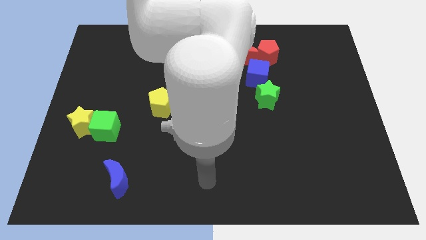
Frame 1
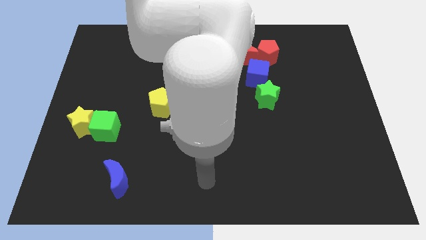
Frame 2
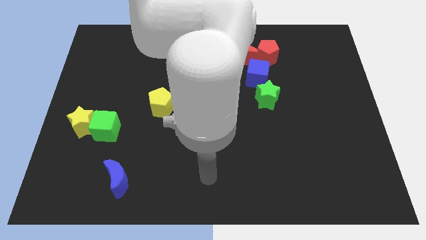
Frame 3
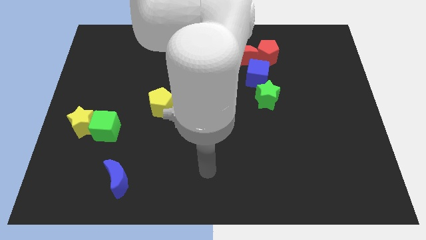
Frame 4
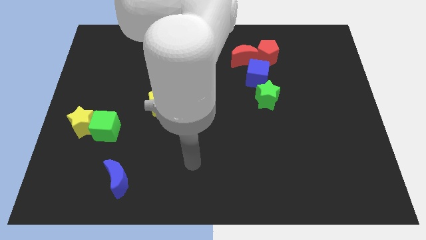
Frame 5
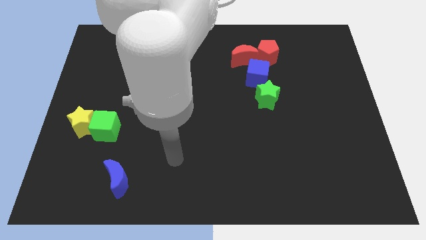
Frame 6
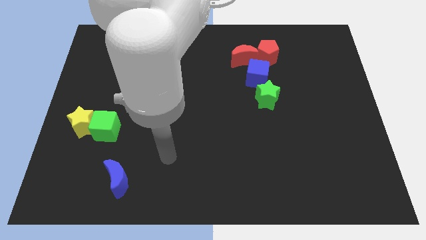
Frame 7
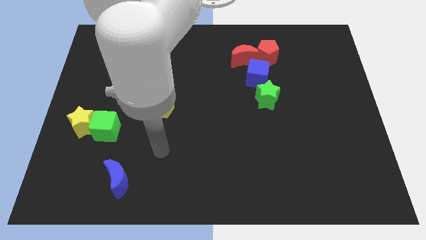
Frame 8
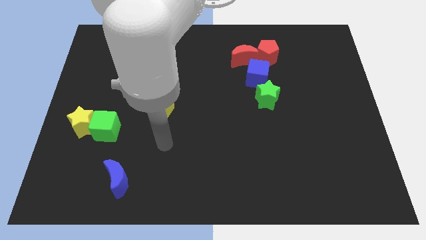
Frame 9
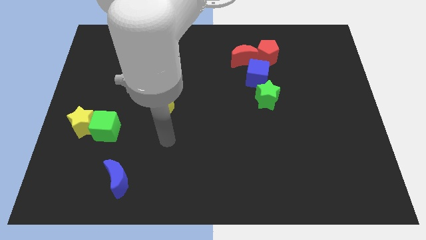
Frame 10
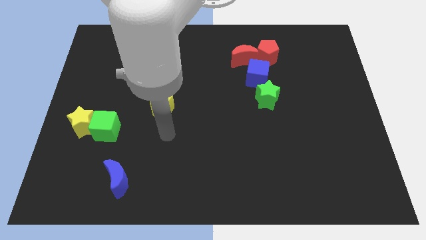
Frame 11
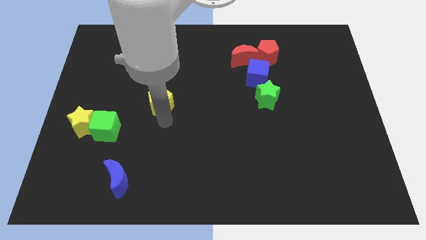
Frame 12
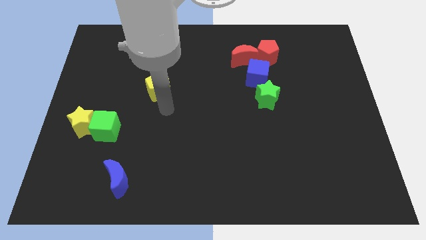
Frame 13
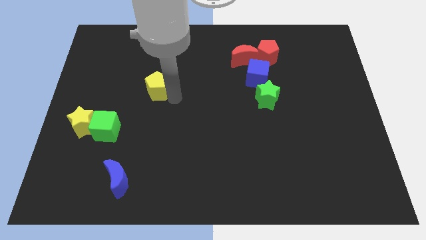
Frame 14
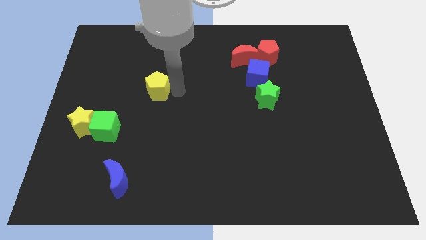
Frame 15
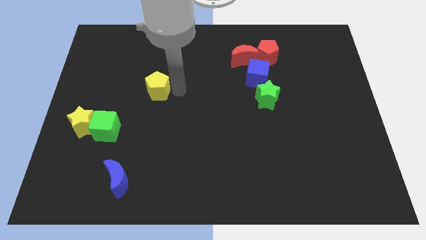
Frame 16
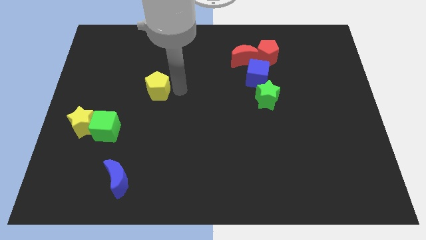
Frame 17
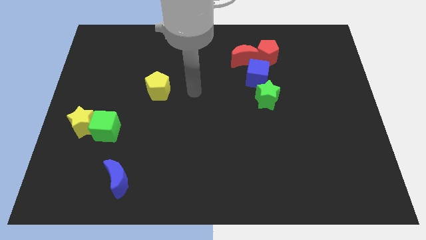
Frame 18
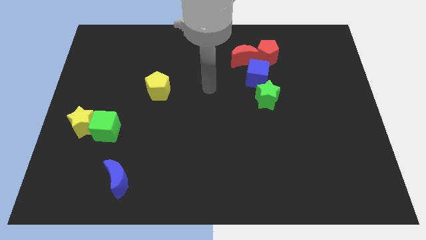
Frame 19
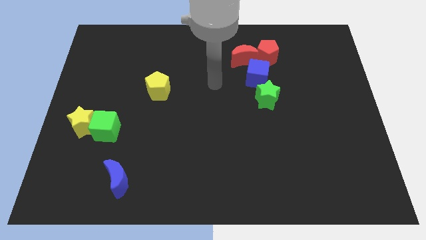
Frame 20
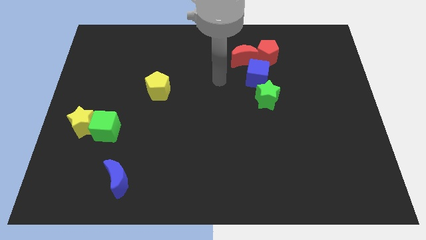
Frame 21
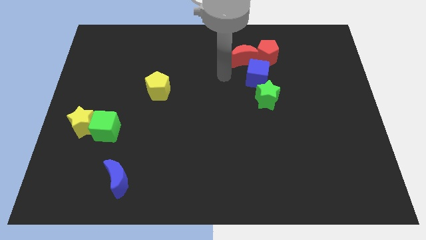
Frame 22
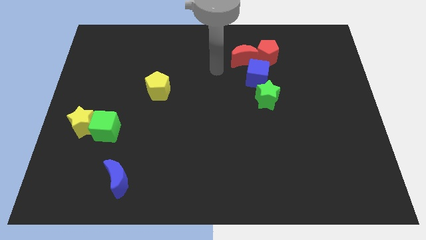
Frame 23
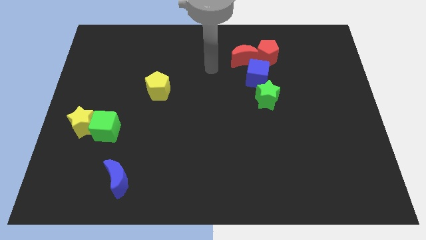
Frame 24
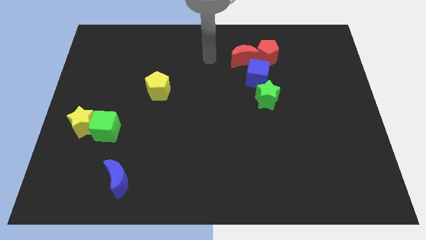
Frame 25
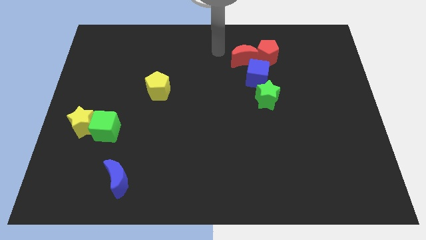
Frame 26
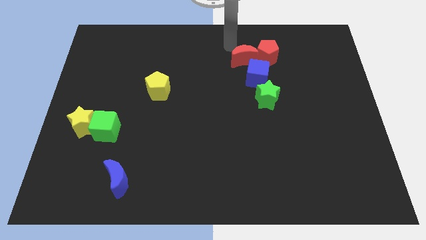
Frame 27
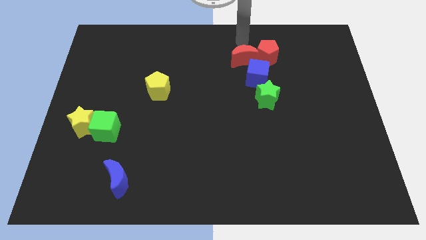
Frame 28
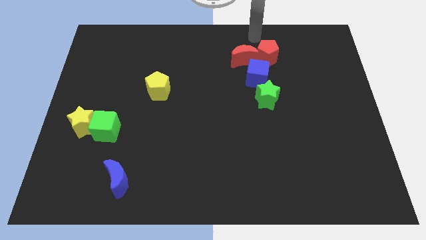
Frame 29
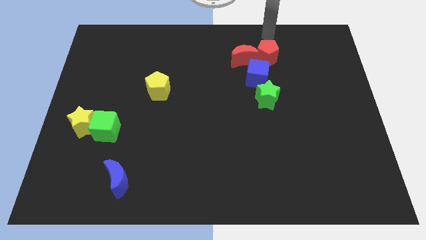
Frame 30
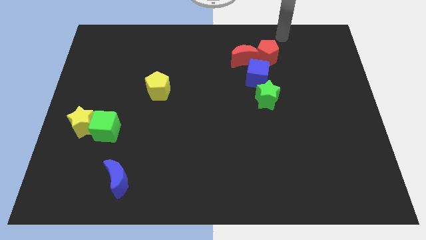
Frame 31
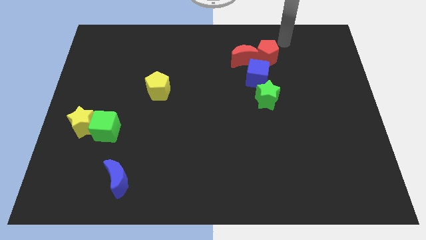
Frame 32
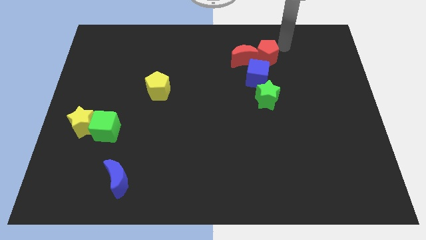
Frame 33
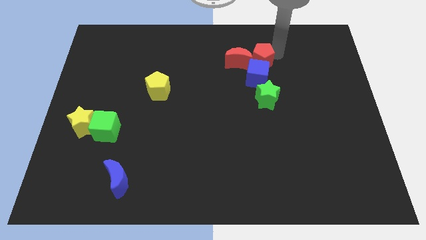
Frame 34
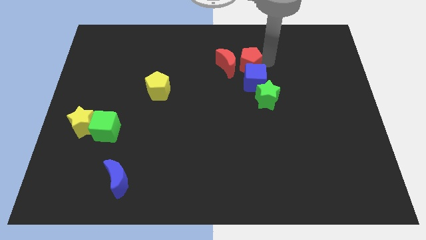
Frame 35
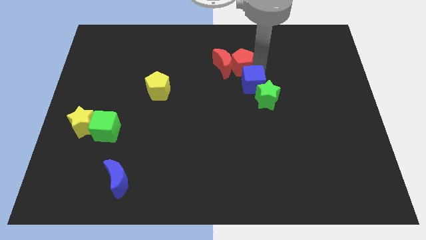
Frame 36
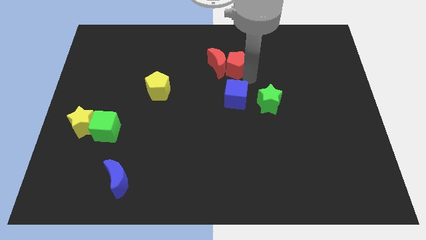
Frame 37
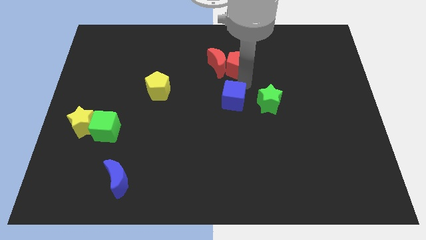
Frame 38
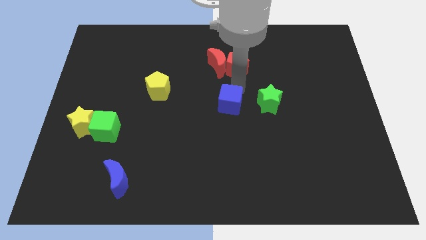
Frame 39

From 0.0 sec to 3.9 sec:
separate blue cube from red pentagon

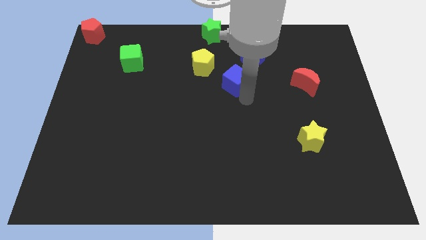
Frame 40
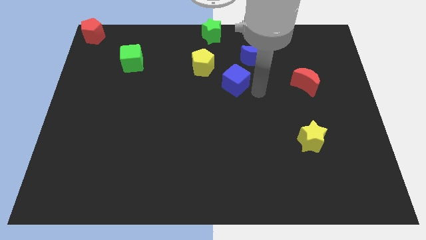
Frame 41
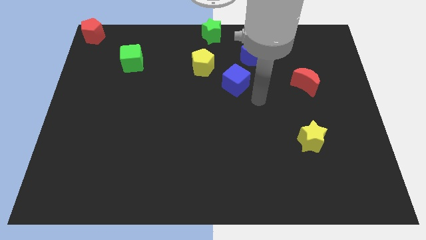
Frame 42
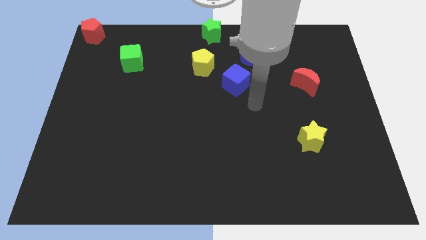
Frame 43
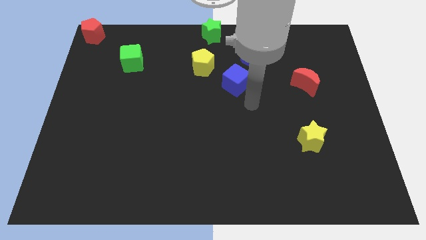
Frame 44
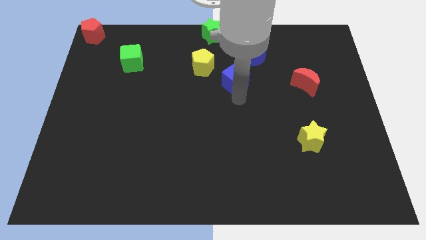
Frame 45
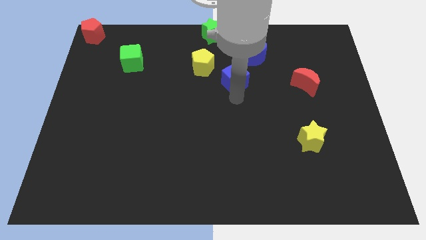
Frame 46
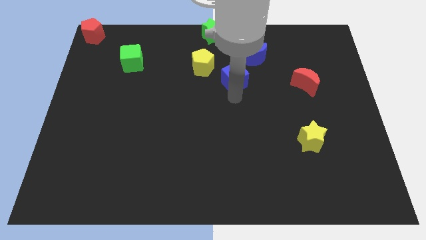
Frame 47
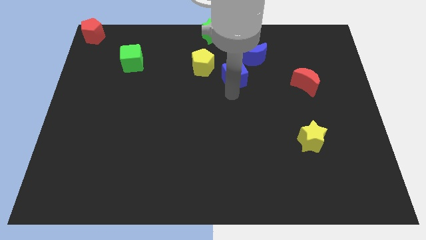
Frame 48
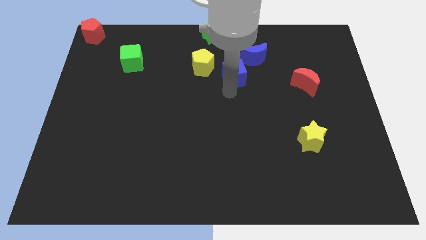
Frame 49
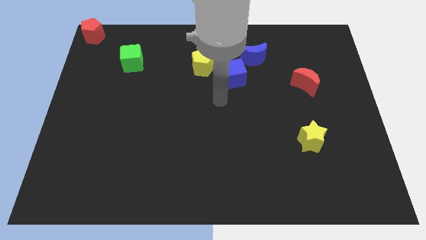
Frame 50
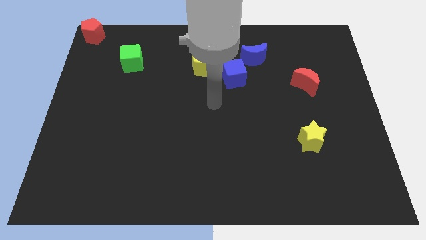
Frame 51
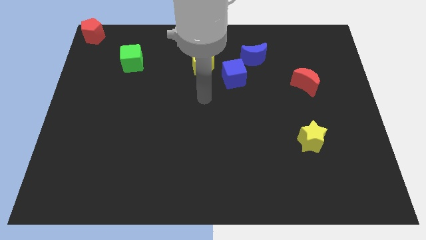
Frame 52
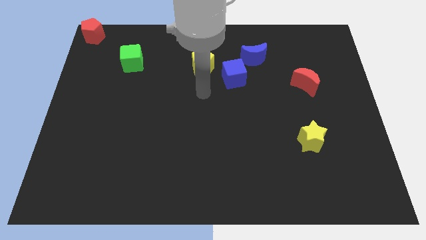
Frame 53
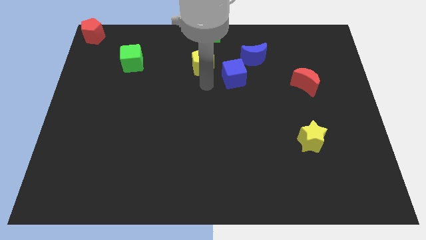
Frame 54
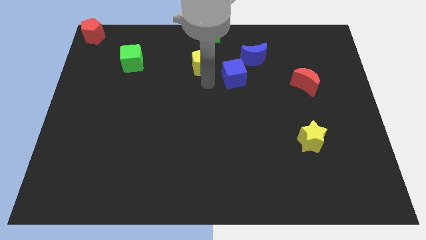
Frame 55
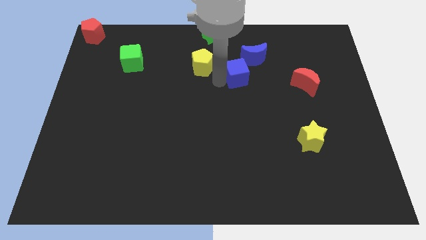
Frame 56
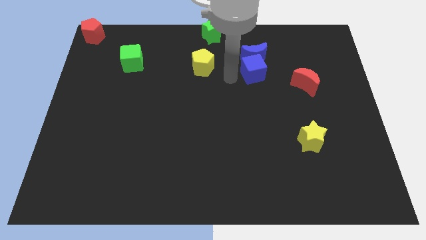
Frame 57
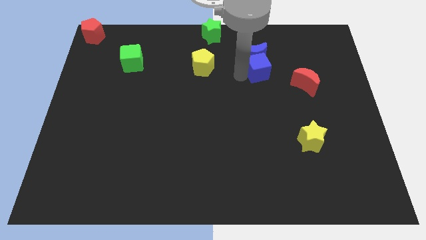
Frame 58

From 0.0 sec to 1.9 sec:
place the blue cube underneath the blue crescent

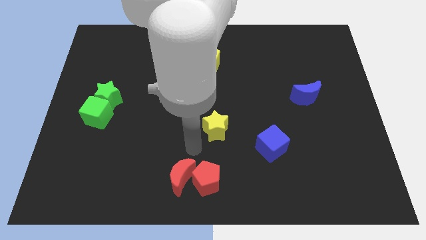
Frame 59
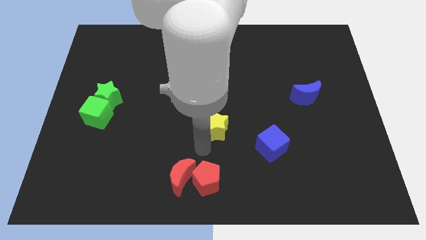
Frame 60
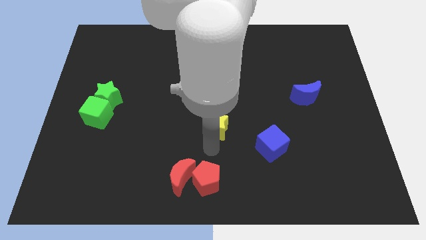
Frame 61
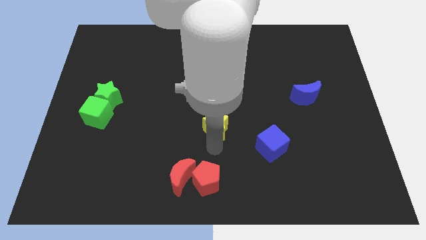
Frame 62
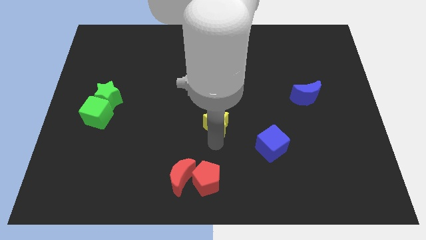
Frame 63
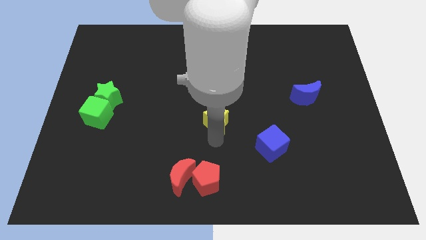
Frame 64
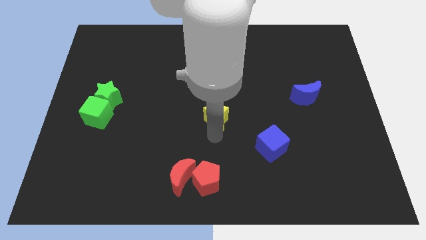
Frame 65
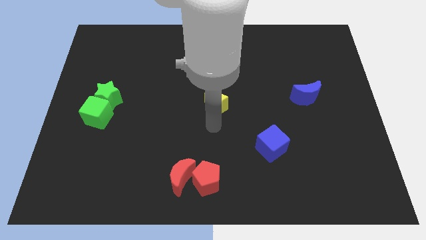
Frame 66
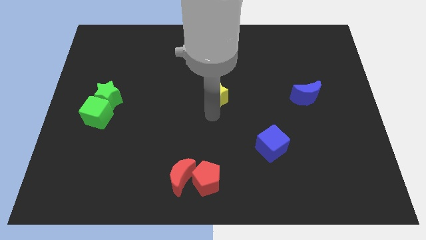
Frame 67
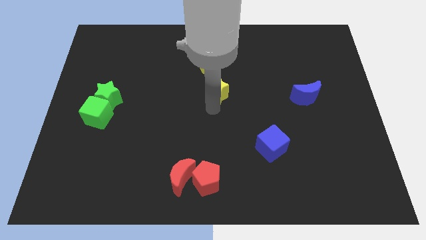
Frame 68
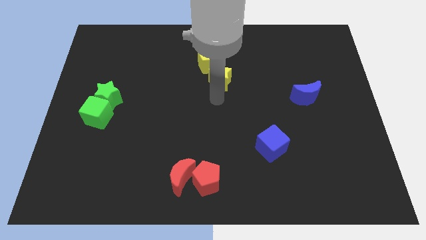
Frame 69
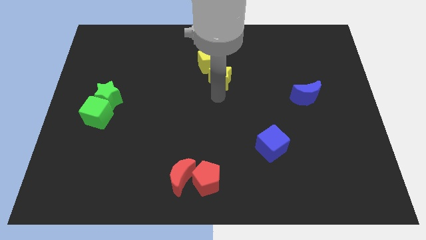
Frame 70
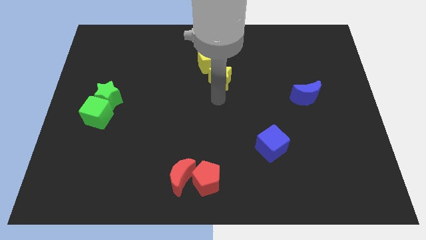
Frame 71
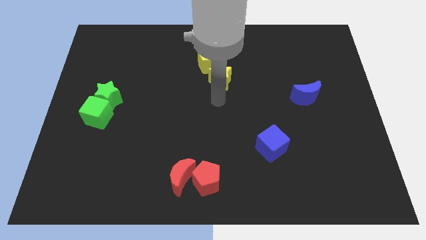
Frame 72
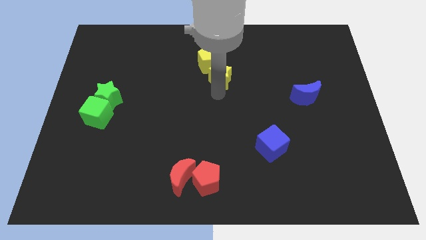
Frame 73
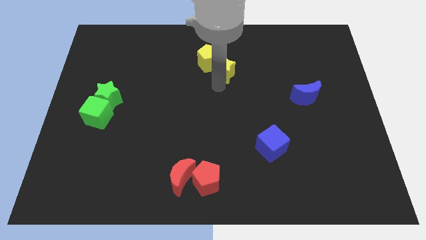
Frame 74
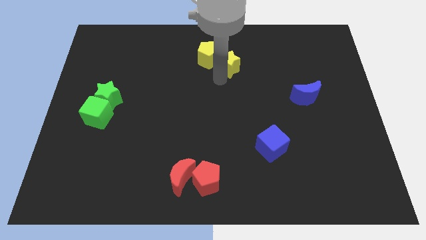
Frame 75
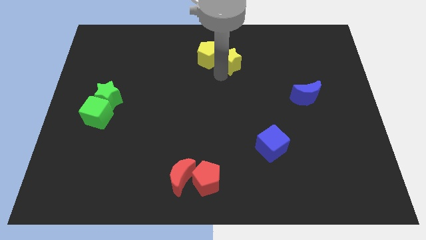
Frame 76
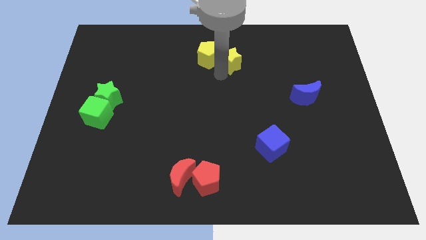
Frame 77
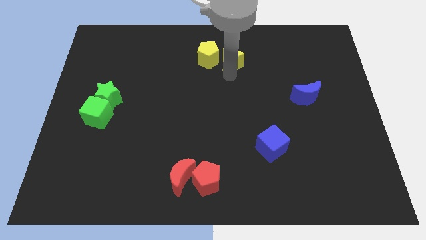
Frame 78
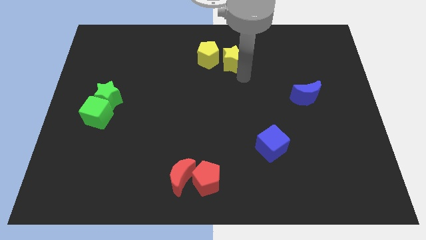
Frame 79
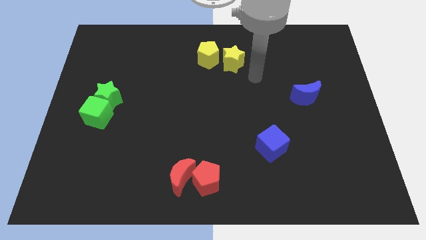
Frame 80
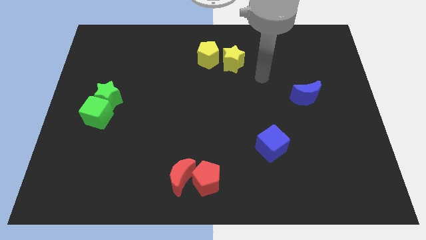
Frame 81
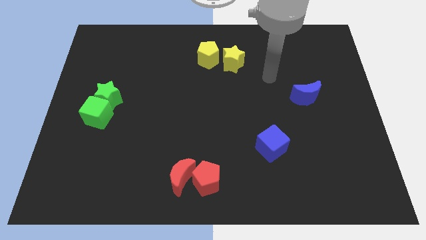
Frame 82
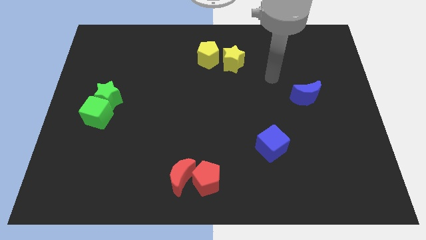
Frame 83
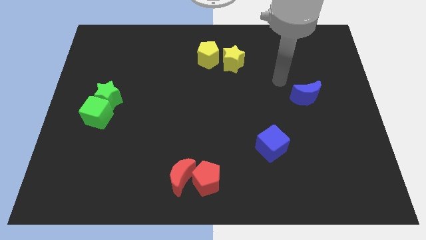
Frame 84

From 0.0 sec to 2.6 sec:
push yellow star yellow pentagon to the top center

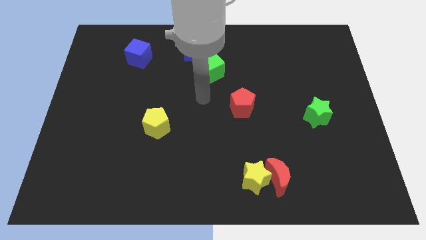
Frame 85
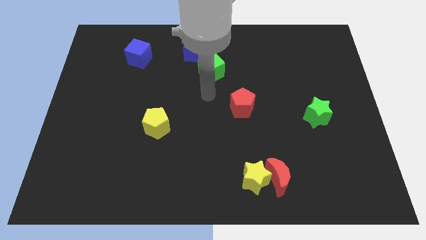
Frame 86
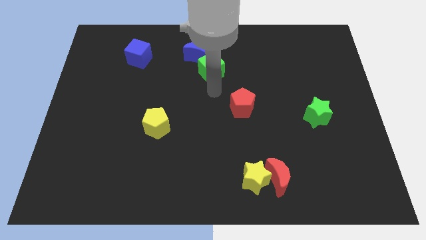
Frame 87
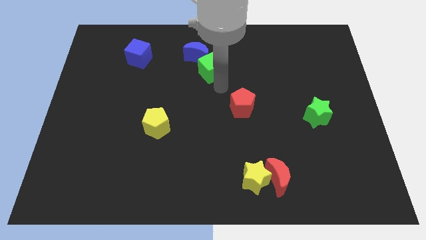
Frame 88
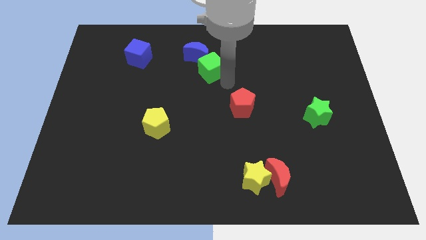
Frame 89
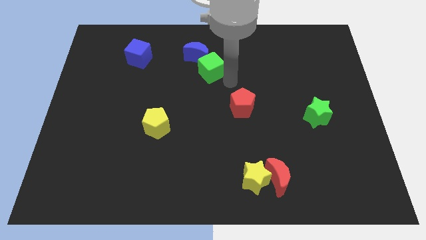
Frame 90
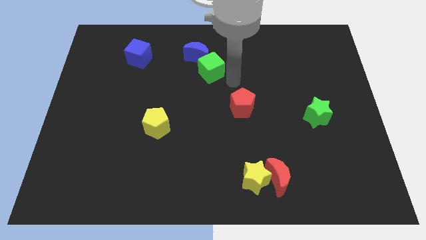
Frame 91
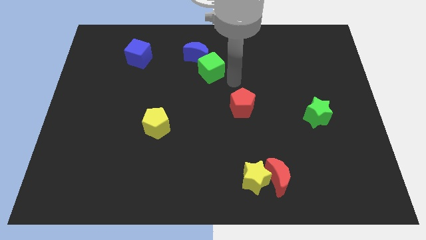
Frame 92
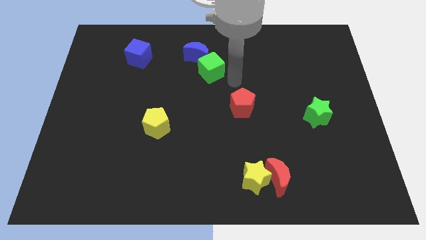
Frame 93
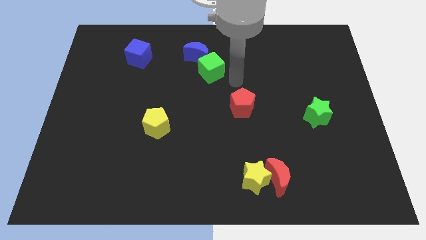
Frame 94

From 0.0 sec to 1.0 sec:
place arm in between green cube and red pentagon
